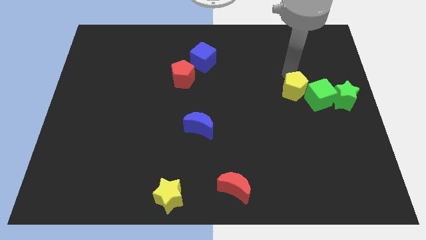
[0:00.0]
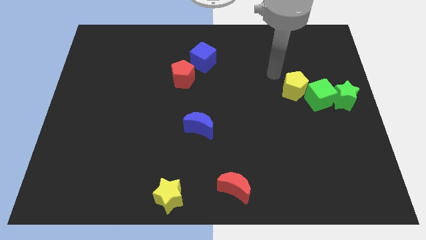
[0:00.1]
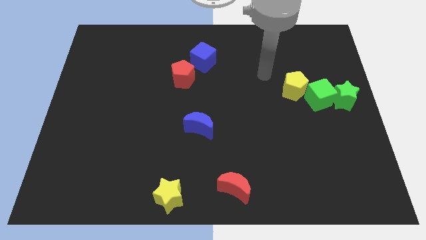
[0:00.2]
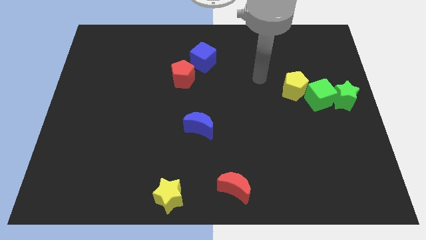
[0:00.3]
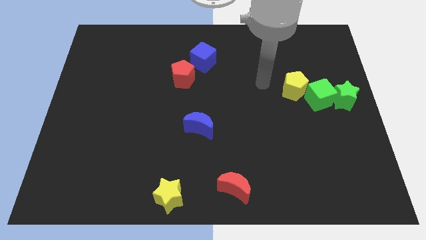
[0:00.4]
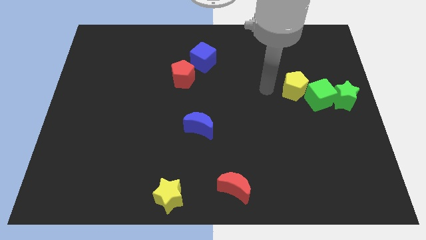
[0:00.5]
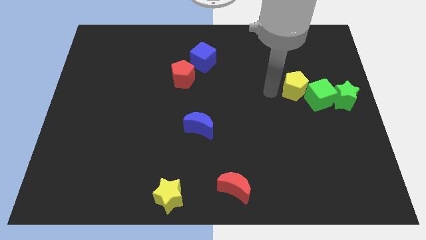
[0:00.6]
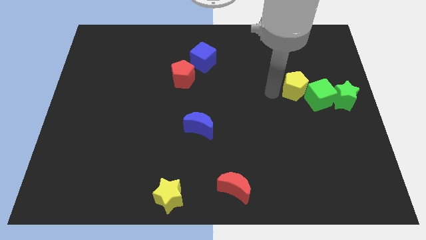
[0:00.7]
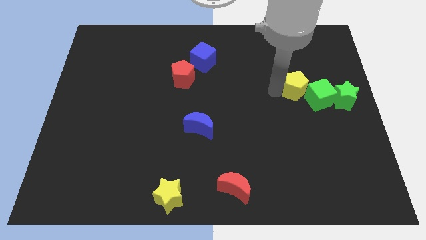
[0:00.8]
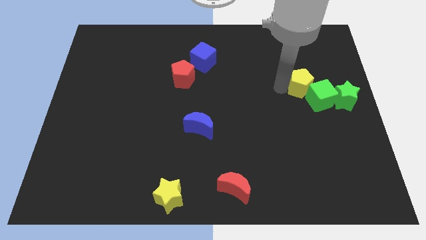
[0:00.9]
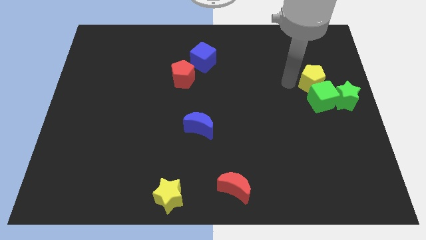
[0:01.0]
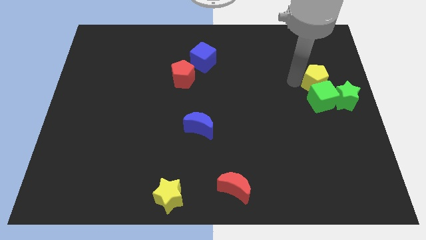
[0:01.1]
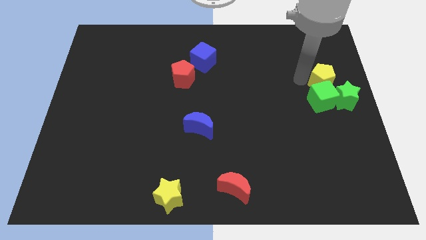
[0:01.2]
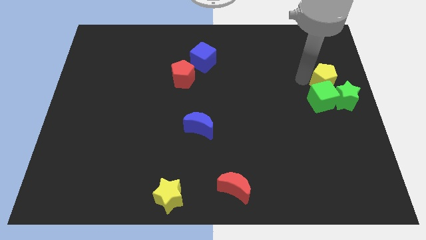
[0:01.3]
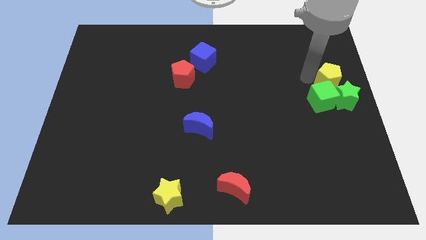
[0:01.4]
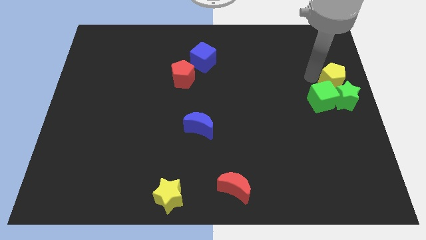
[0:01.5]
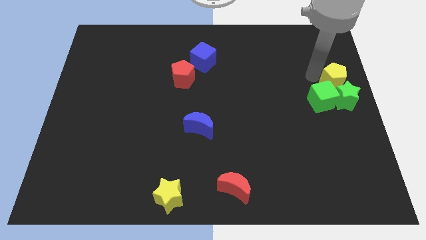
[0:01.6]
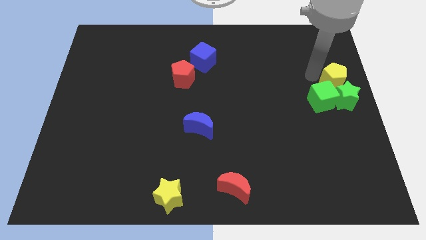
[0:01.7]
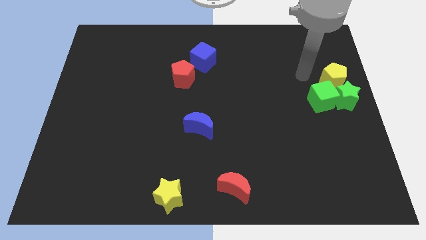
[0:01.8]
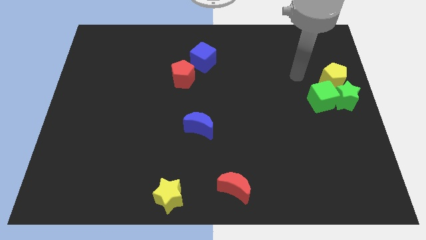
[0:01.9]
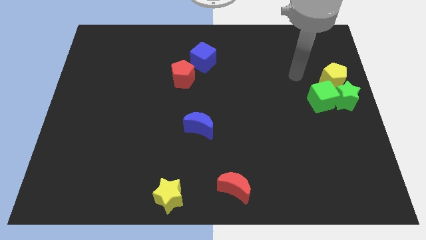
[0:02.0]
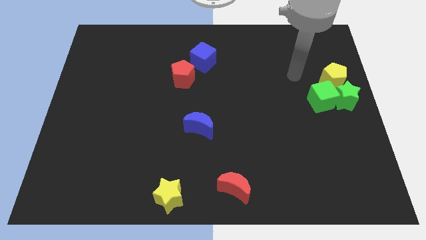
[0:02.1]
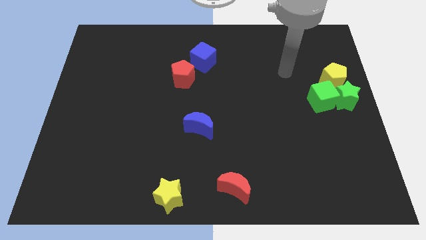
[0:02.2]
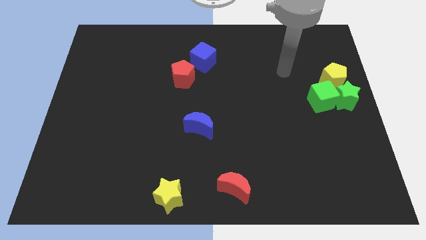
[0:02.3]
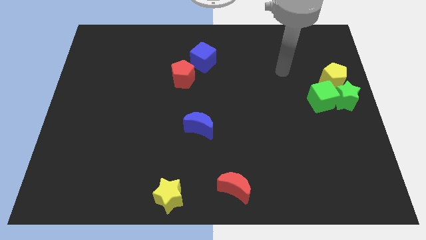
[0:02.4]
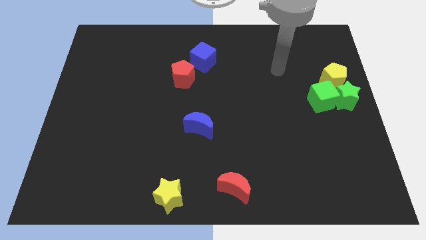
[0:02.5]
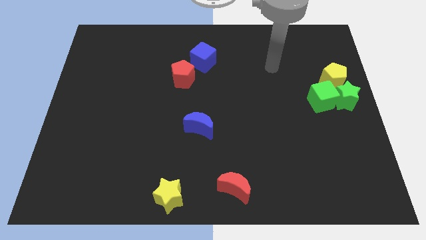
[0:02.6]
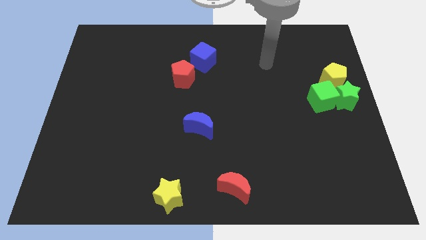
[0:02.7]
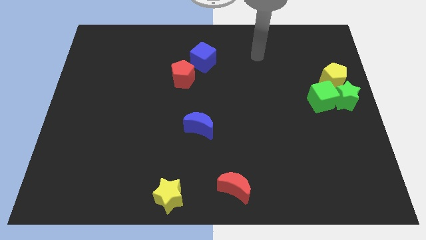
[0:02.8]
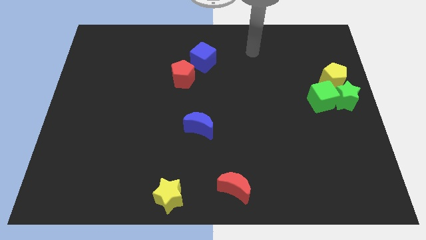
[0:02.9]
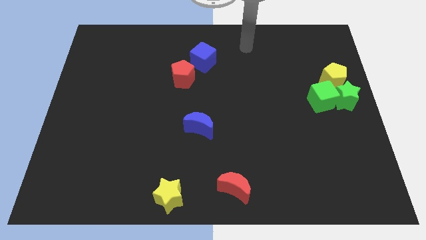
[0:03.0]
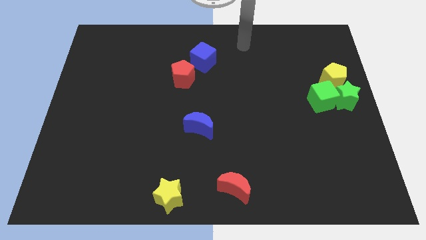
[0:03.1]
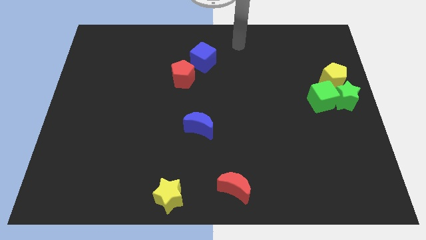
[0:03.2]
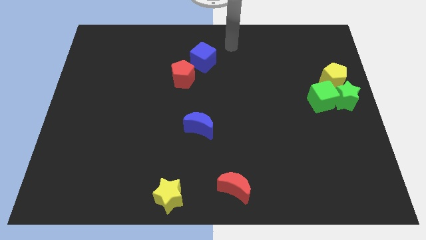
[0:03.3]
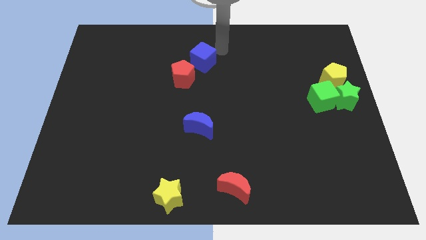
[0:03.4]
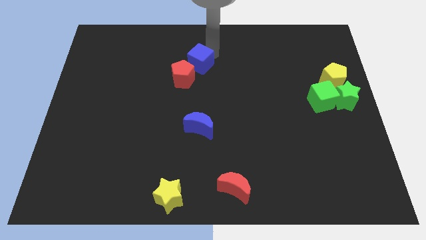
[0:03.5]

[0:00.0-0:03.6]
slide the yellow pentagon diagonally top right to the blue cube

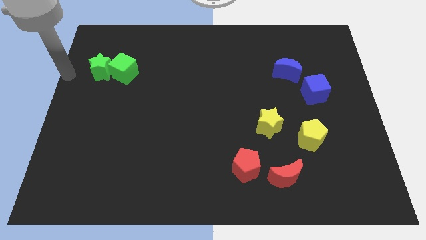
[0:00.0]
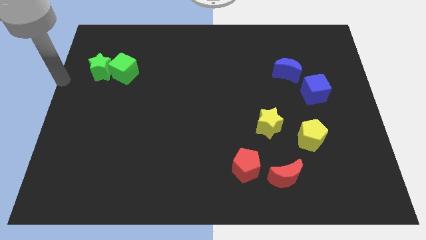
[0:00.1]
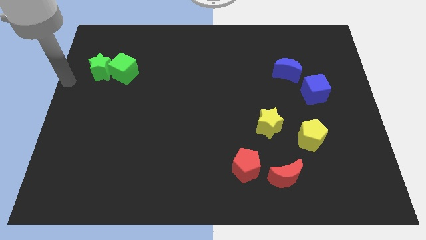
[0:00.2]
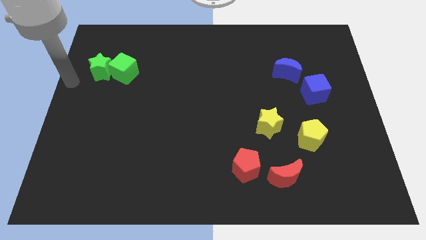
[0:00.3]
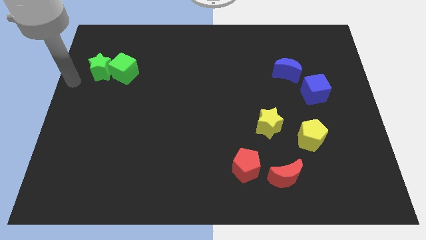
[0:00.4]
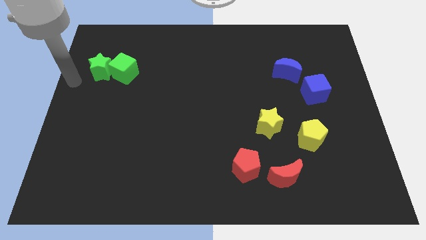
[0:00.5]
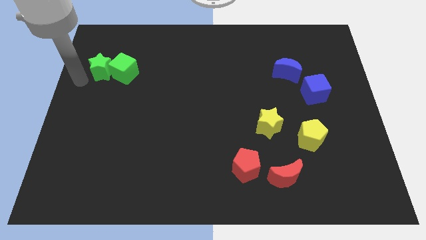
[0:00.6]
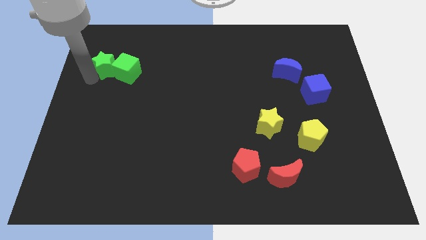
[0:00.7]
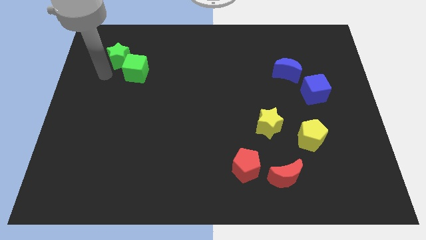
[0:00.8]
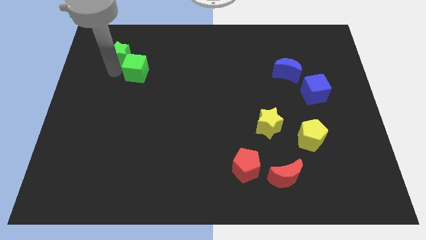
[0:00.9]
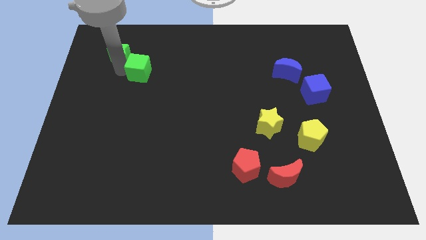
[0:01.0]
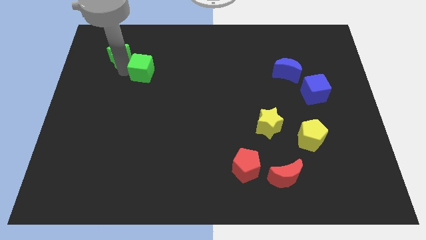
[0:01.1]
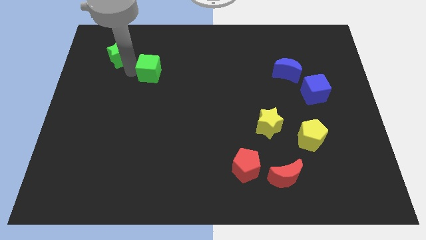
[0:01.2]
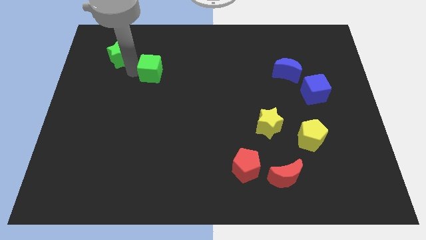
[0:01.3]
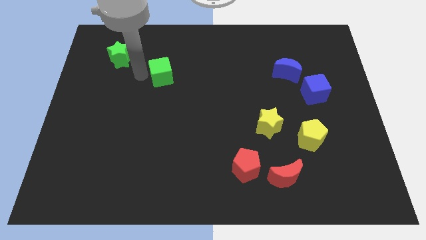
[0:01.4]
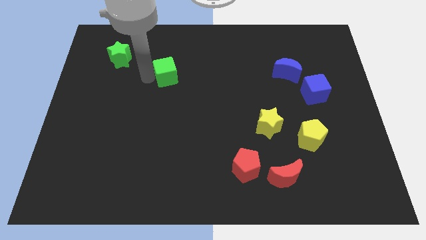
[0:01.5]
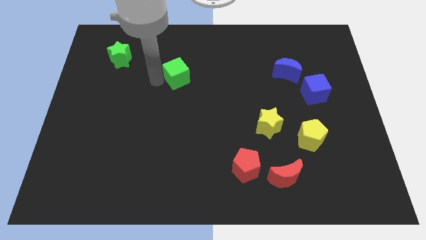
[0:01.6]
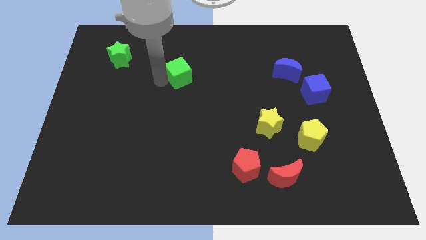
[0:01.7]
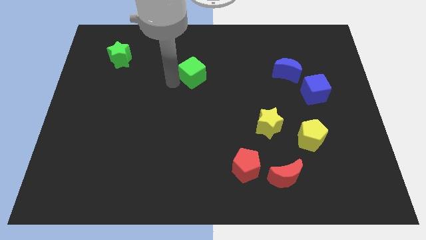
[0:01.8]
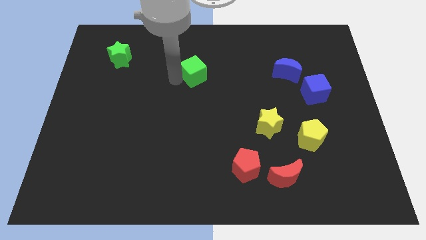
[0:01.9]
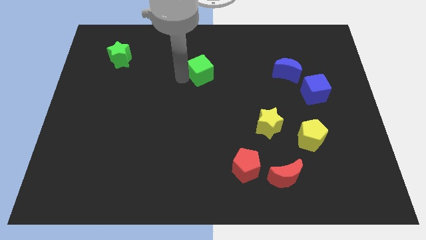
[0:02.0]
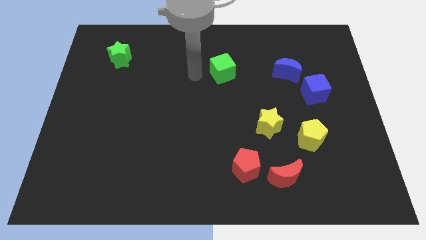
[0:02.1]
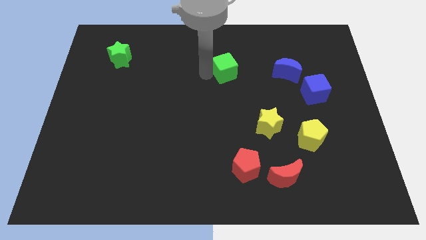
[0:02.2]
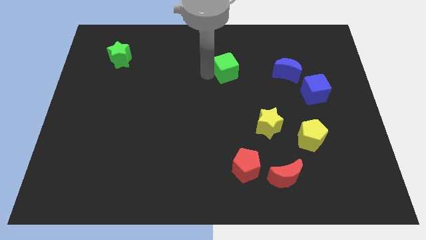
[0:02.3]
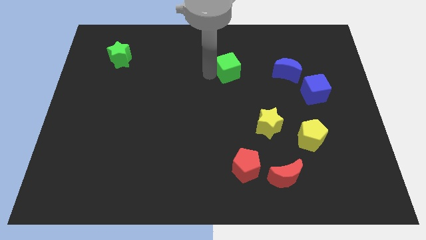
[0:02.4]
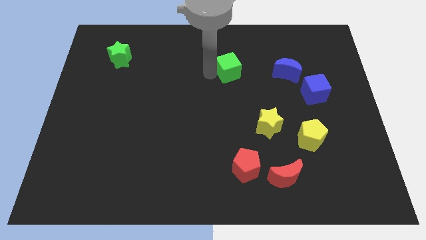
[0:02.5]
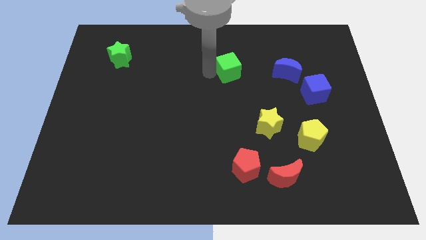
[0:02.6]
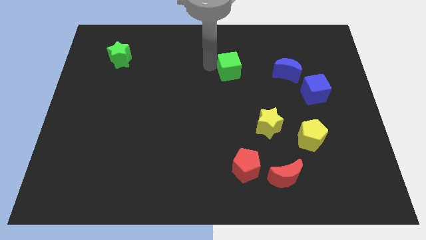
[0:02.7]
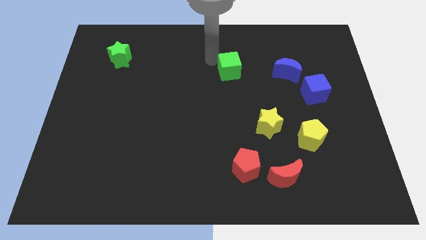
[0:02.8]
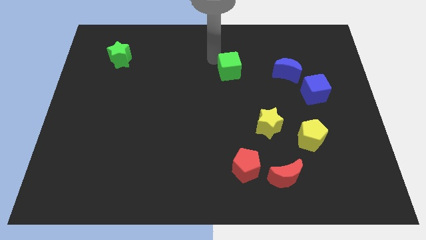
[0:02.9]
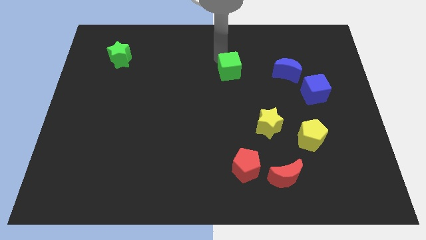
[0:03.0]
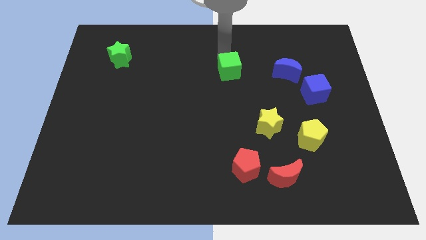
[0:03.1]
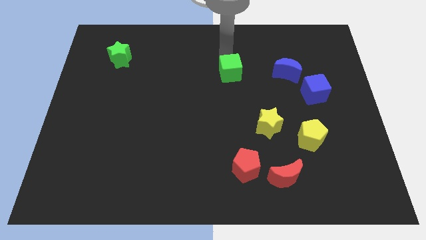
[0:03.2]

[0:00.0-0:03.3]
push the green cube to the horizontal left of the blue moon

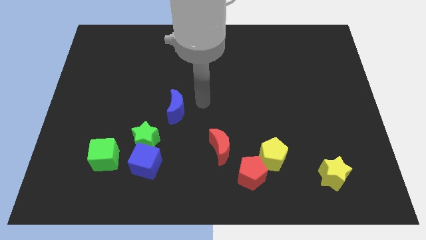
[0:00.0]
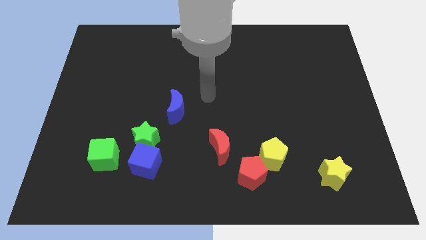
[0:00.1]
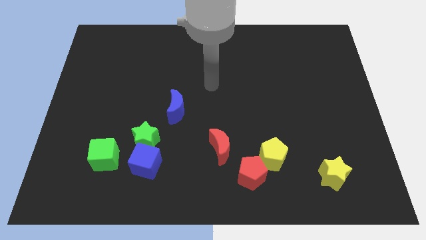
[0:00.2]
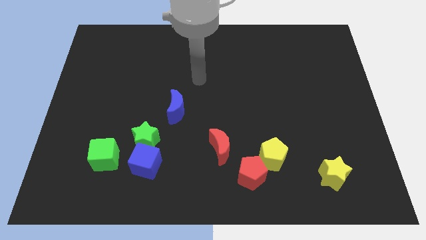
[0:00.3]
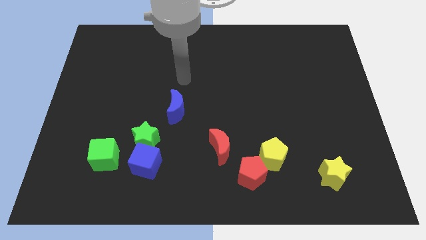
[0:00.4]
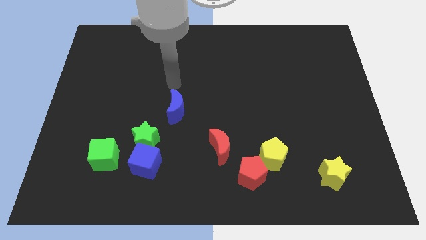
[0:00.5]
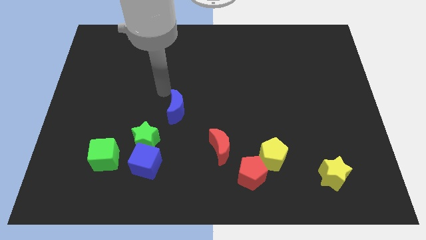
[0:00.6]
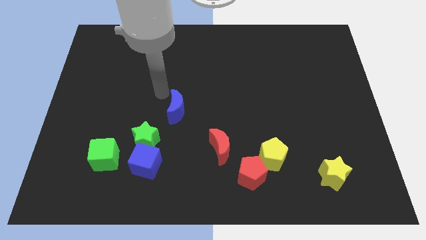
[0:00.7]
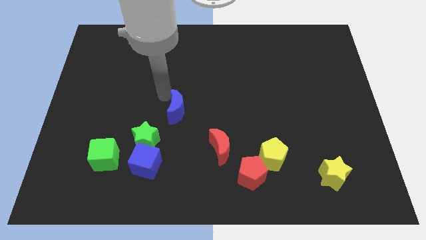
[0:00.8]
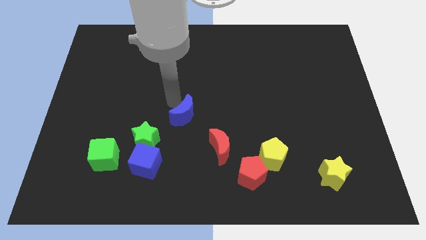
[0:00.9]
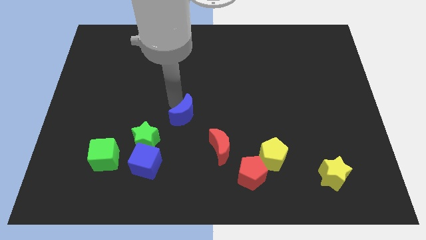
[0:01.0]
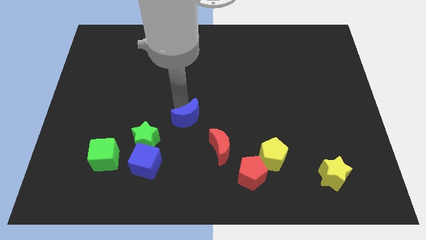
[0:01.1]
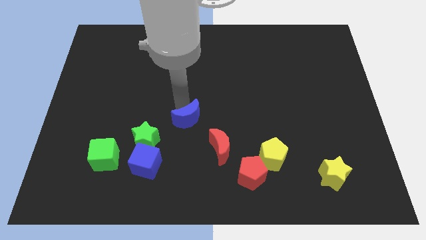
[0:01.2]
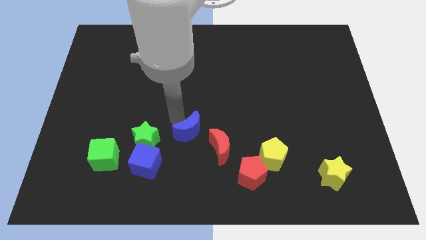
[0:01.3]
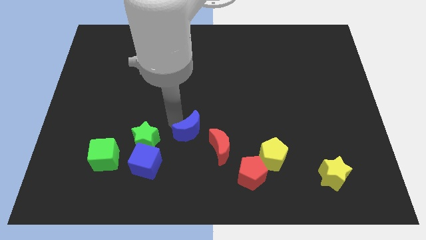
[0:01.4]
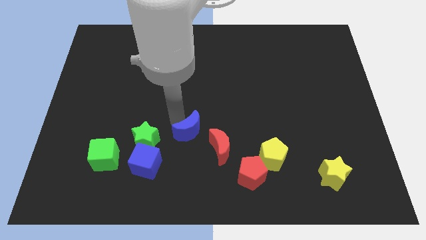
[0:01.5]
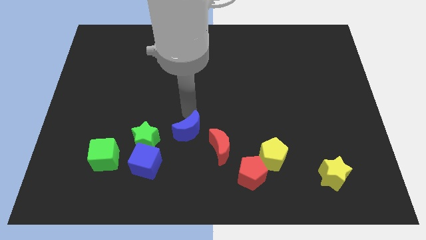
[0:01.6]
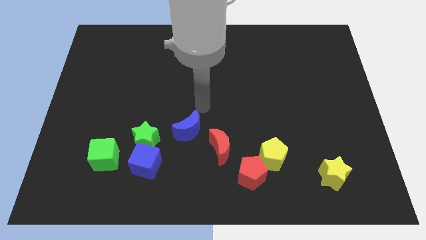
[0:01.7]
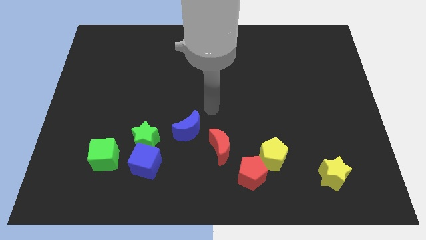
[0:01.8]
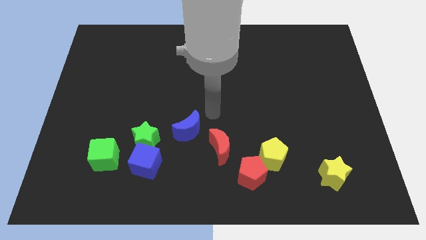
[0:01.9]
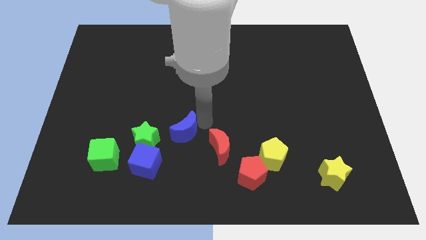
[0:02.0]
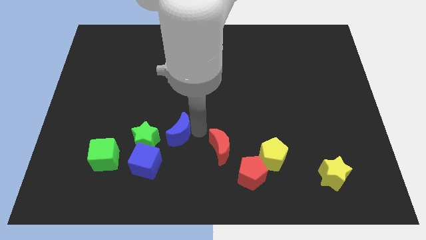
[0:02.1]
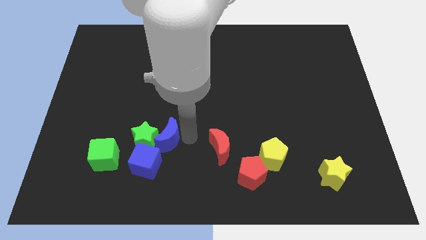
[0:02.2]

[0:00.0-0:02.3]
push the blue crescent into the green star
